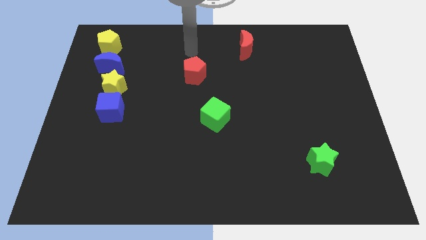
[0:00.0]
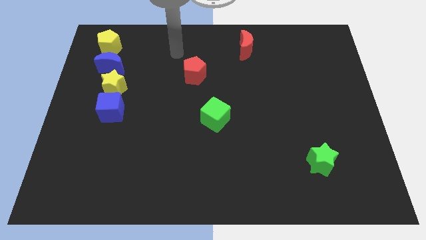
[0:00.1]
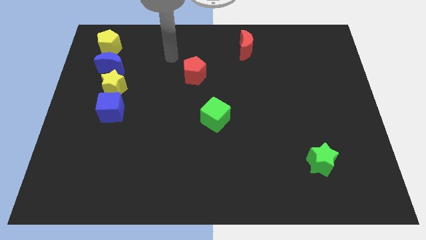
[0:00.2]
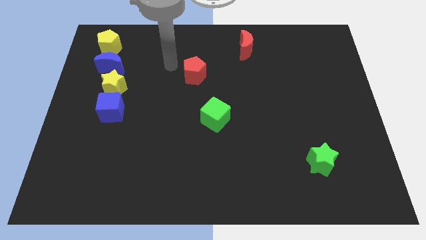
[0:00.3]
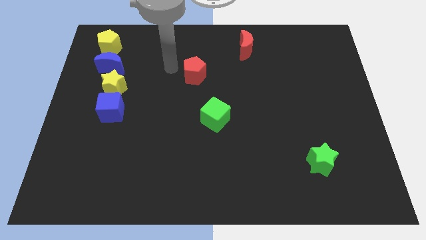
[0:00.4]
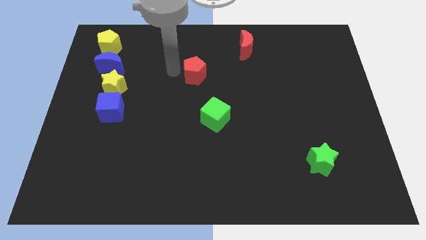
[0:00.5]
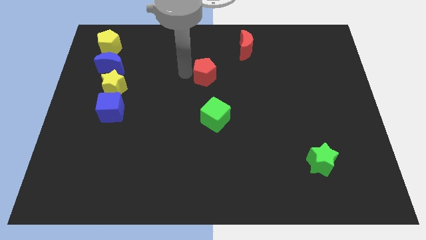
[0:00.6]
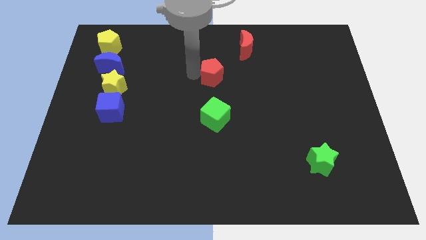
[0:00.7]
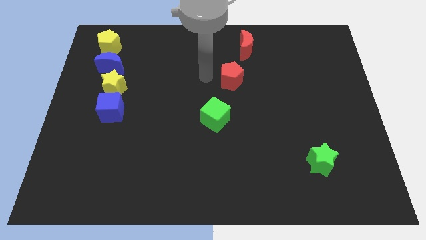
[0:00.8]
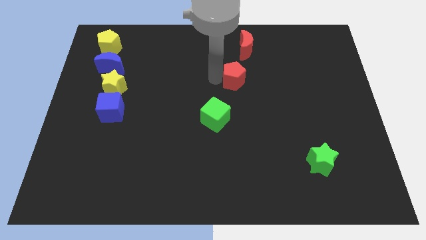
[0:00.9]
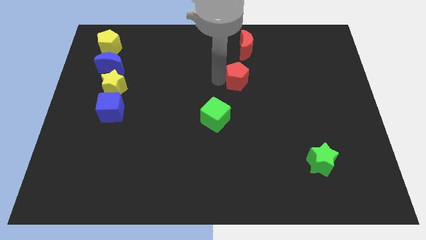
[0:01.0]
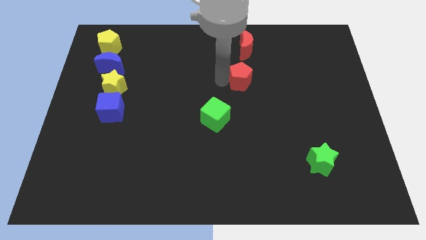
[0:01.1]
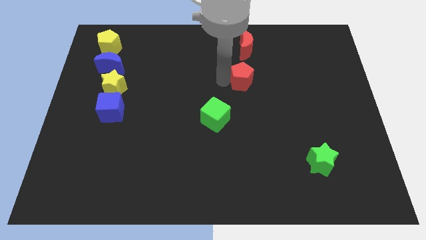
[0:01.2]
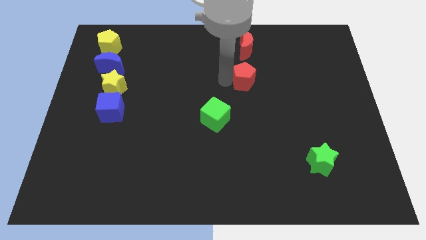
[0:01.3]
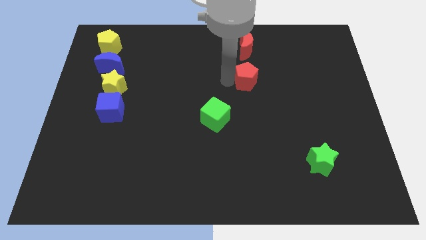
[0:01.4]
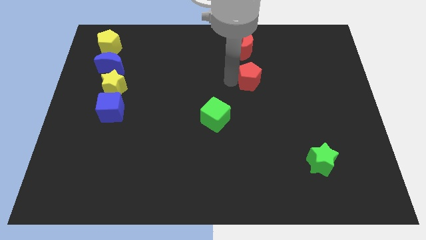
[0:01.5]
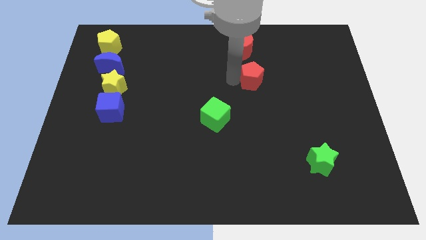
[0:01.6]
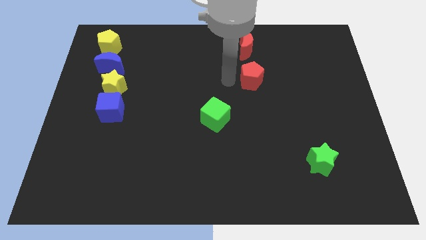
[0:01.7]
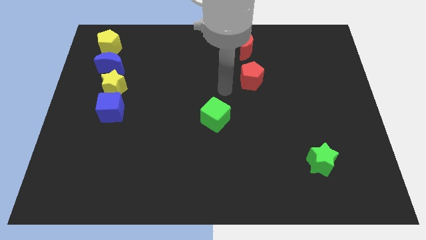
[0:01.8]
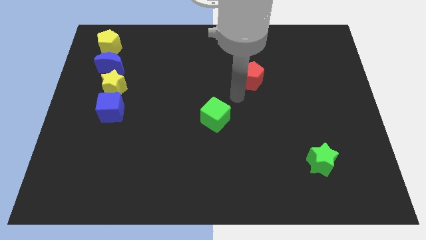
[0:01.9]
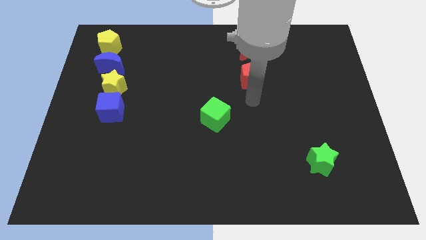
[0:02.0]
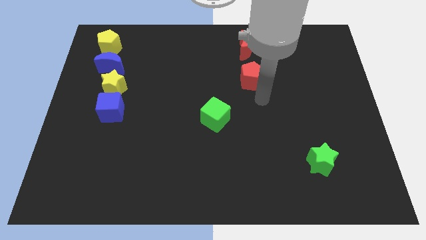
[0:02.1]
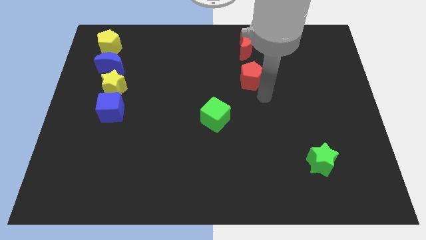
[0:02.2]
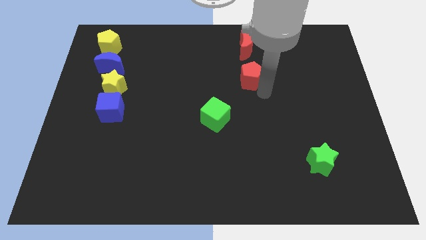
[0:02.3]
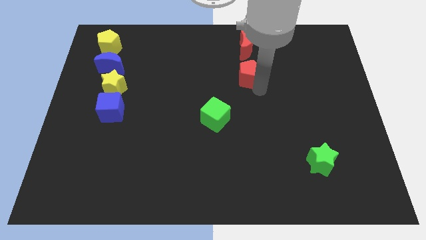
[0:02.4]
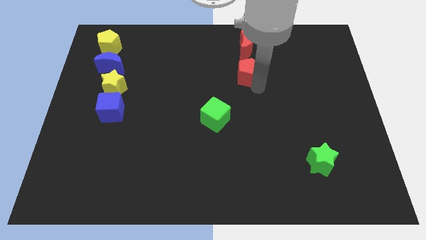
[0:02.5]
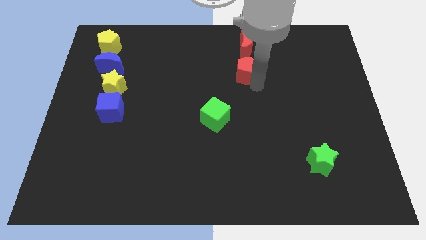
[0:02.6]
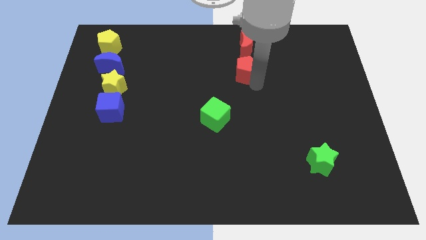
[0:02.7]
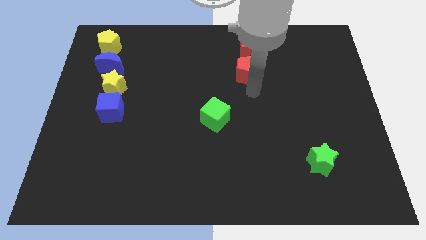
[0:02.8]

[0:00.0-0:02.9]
push the red pentagon below the red crescent

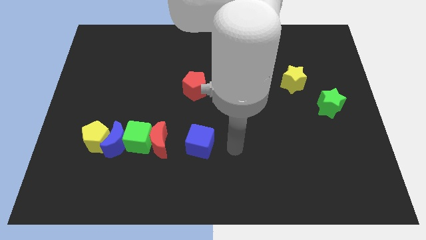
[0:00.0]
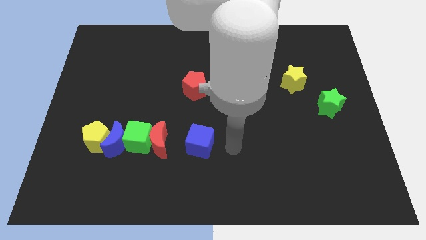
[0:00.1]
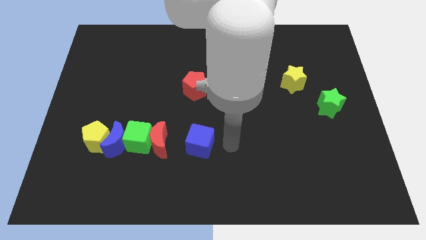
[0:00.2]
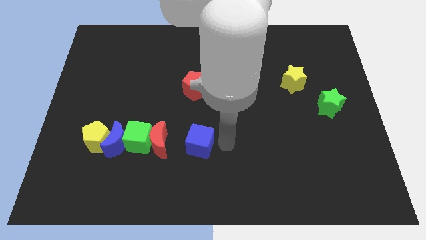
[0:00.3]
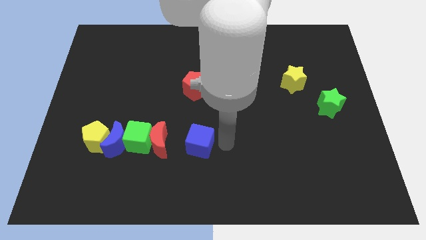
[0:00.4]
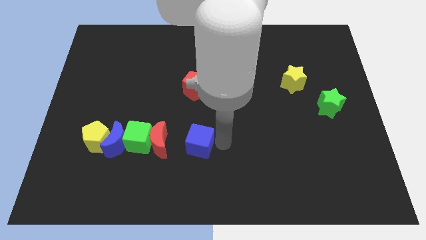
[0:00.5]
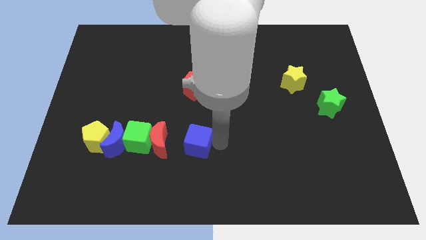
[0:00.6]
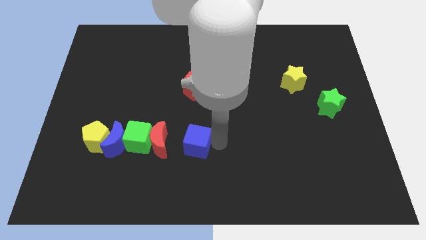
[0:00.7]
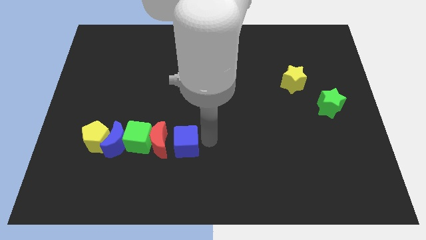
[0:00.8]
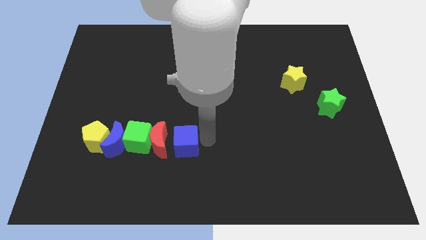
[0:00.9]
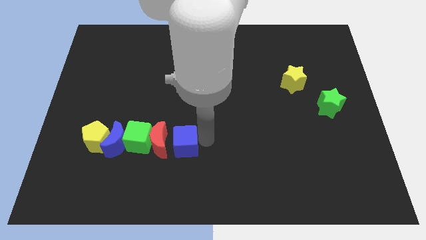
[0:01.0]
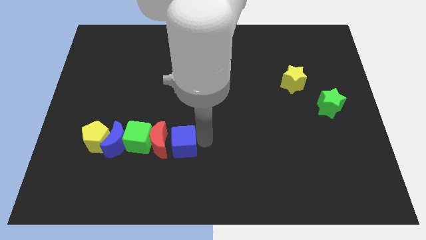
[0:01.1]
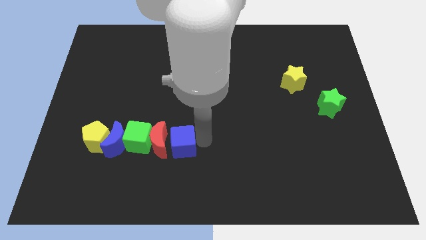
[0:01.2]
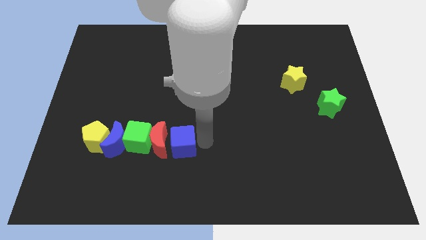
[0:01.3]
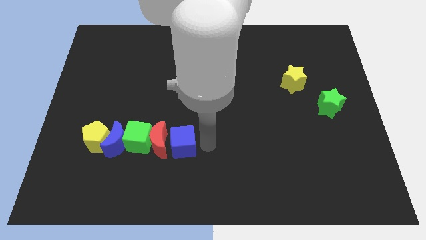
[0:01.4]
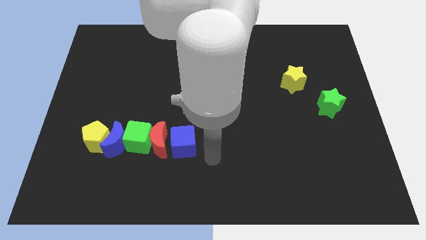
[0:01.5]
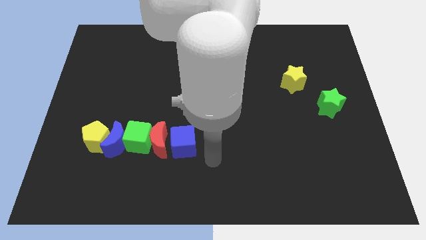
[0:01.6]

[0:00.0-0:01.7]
move blue cube right beside the red moon

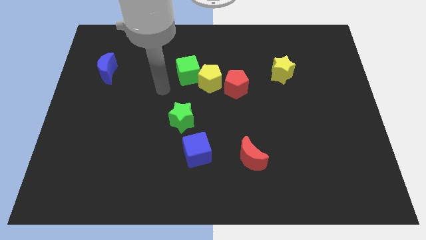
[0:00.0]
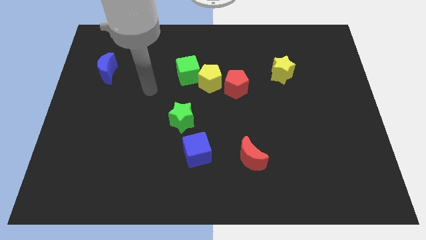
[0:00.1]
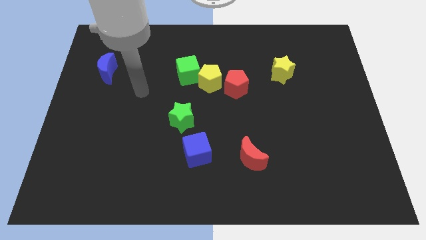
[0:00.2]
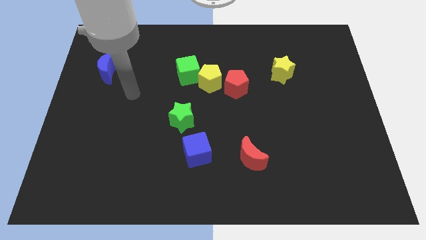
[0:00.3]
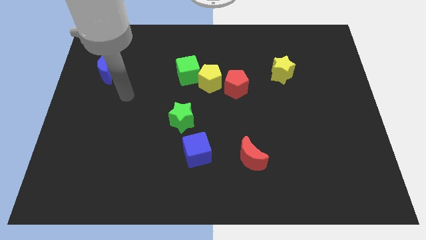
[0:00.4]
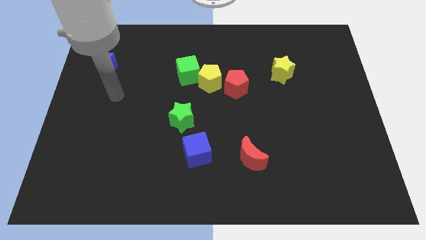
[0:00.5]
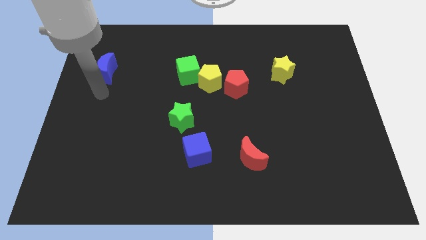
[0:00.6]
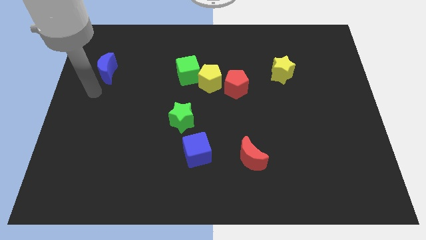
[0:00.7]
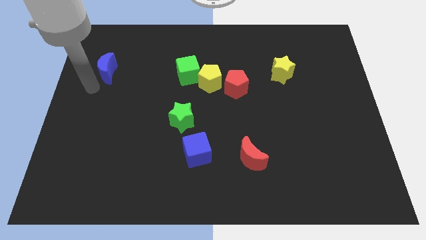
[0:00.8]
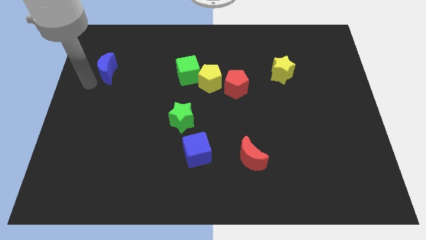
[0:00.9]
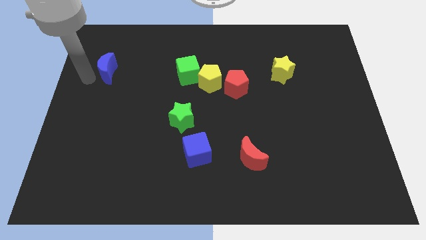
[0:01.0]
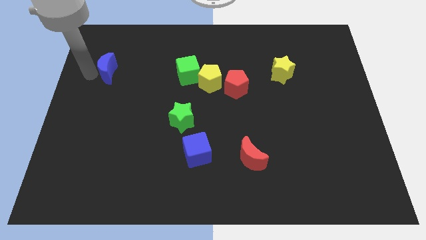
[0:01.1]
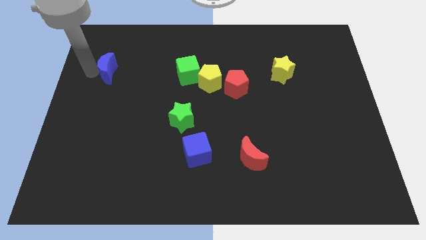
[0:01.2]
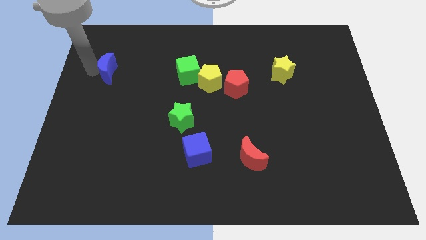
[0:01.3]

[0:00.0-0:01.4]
go near the blue moon

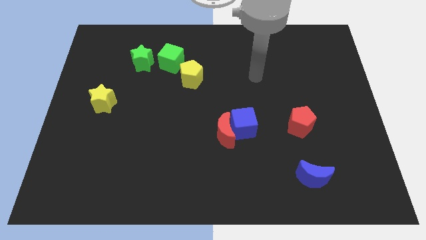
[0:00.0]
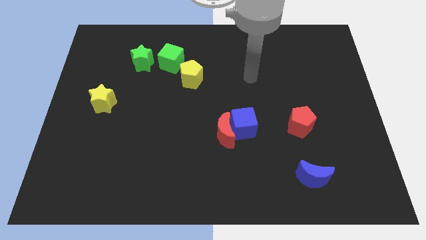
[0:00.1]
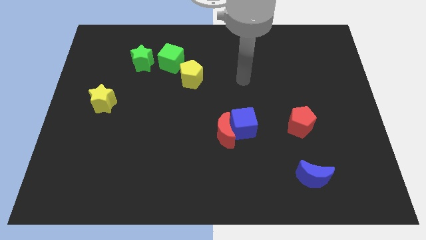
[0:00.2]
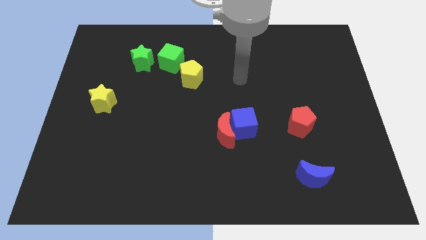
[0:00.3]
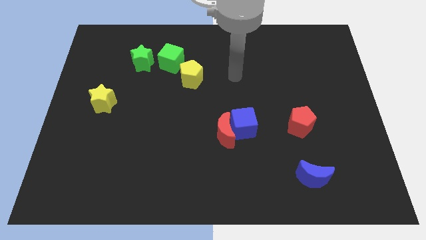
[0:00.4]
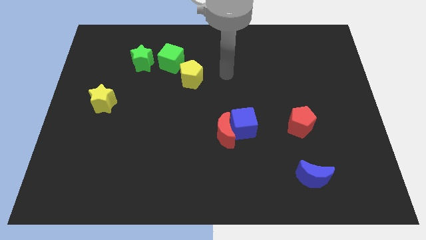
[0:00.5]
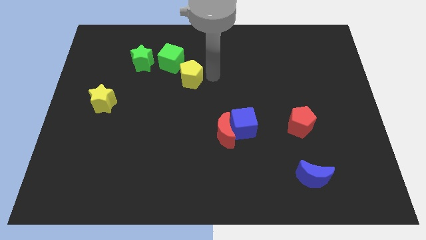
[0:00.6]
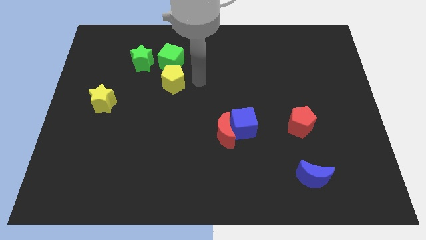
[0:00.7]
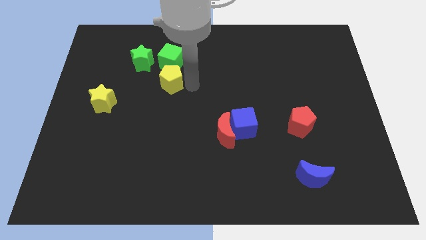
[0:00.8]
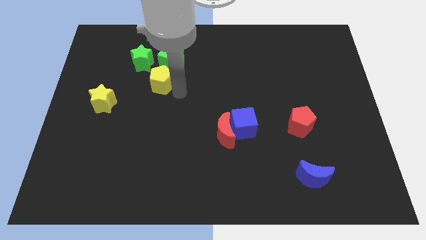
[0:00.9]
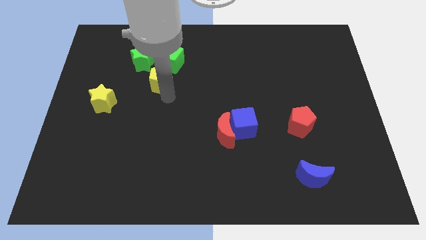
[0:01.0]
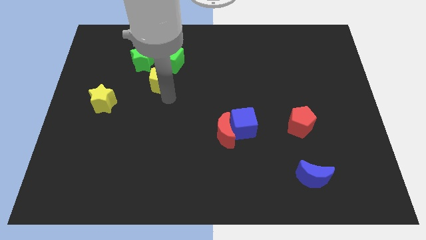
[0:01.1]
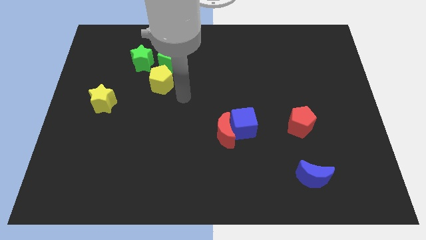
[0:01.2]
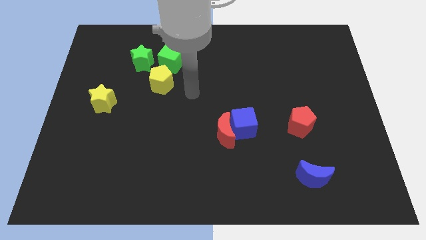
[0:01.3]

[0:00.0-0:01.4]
touch the yellow pentagon

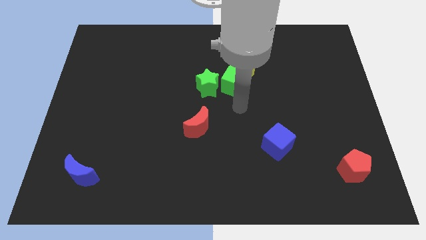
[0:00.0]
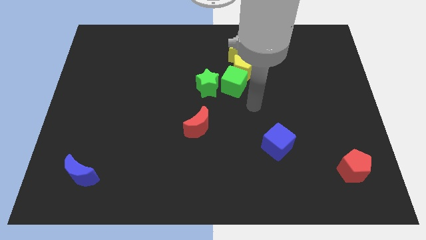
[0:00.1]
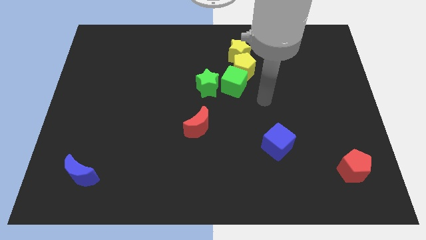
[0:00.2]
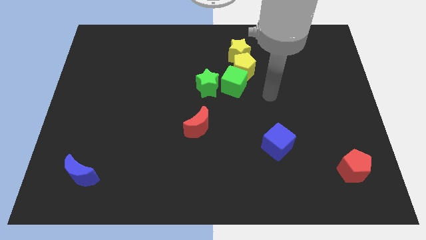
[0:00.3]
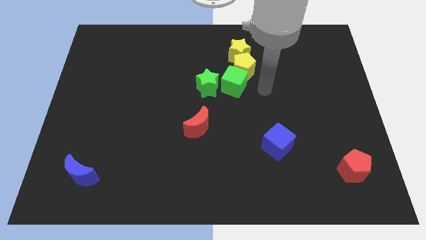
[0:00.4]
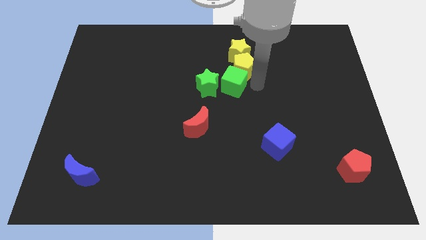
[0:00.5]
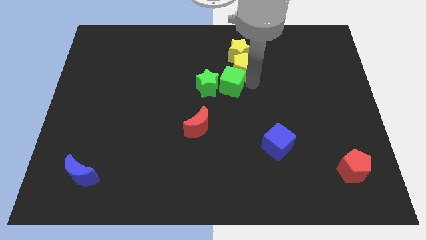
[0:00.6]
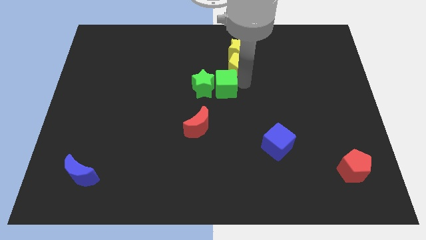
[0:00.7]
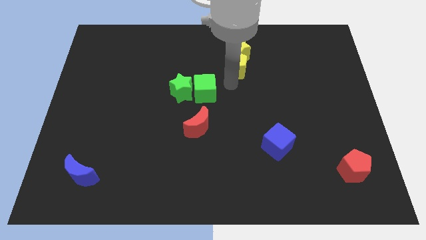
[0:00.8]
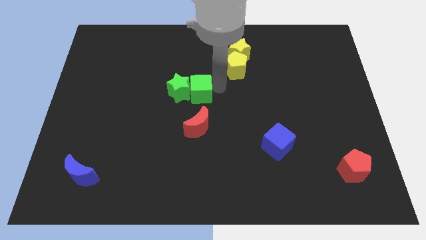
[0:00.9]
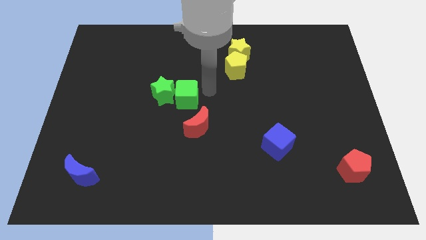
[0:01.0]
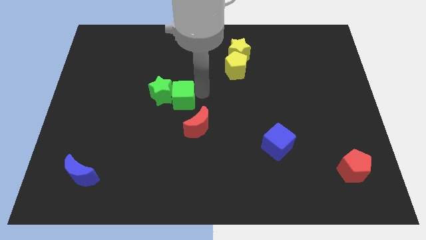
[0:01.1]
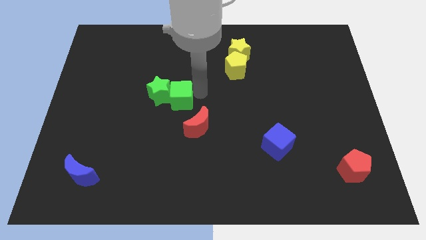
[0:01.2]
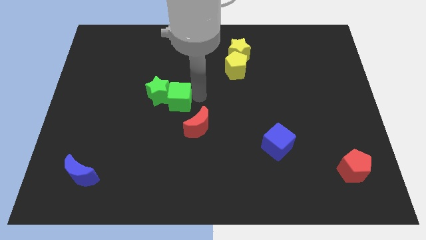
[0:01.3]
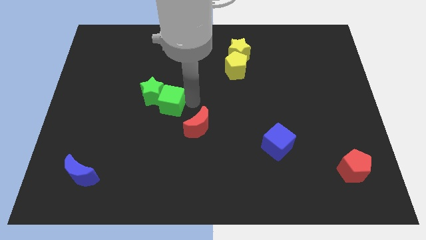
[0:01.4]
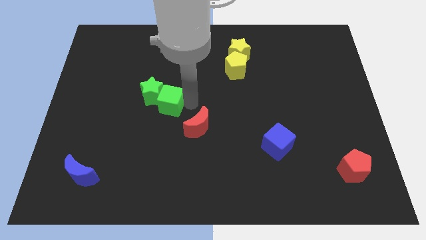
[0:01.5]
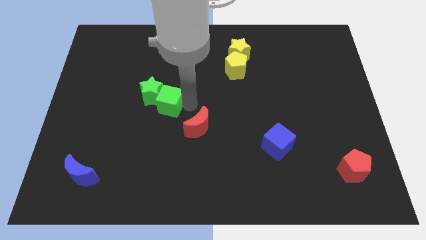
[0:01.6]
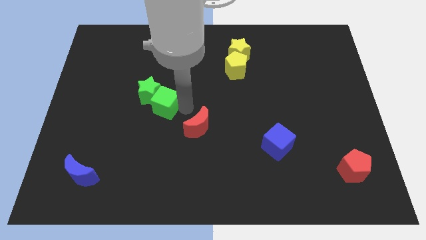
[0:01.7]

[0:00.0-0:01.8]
place both the green blocks at the top left side of the red crescent
